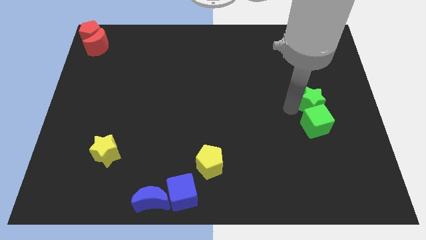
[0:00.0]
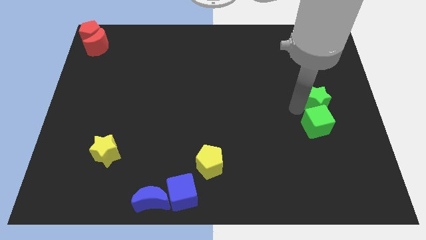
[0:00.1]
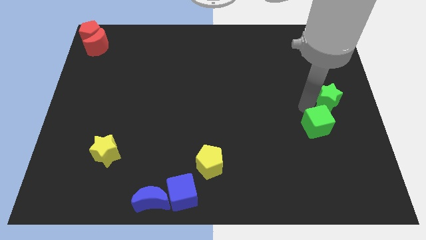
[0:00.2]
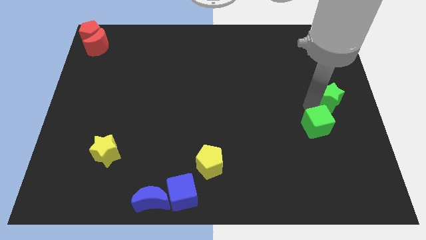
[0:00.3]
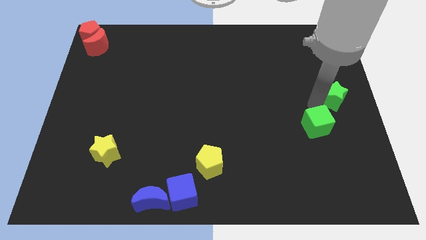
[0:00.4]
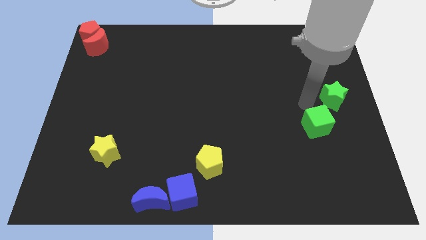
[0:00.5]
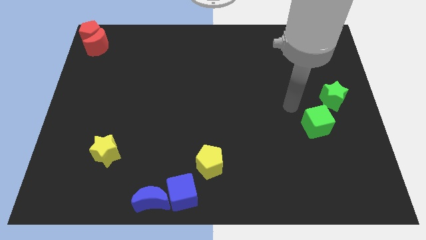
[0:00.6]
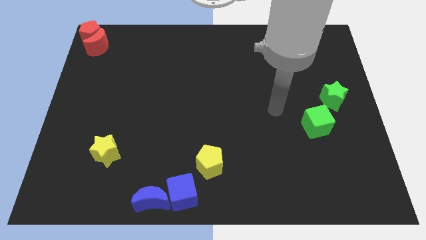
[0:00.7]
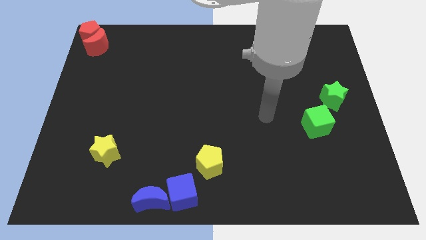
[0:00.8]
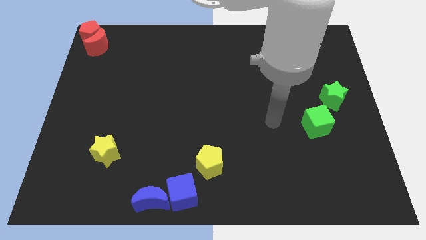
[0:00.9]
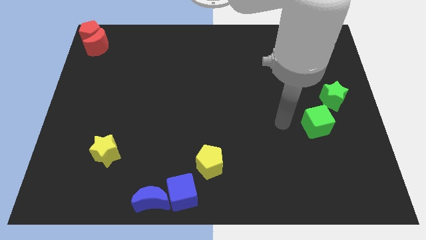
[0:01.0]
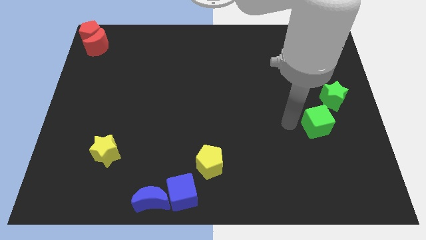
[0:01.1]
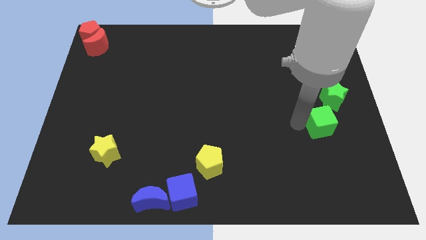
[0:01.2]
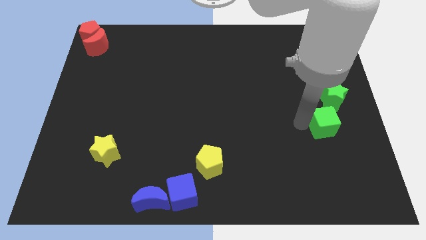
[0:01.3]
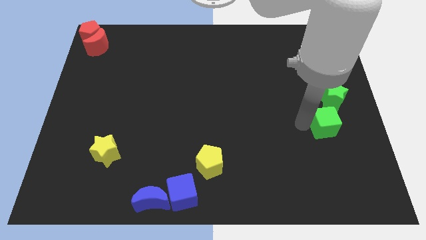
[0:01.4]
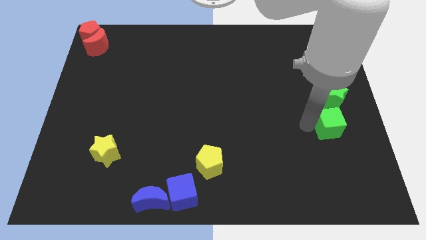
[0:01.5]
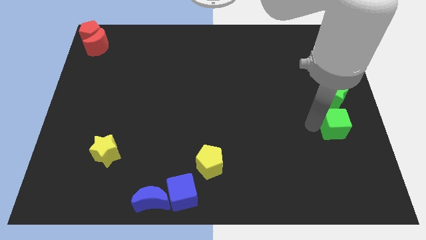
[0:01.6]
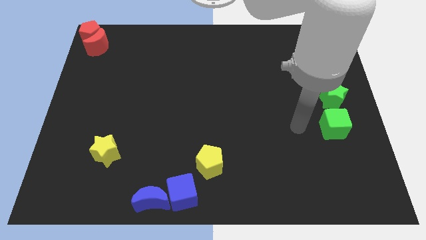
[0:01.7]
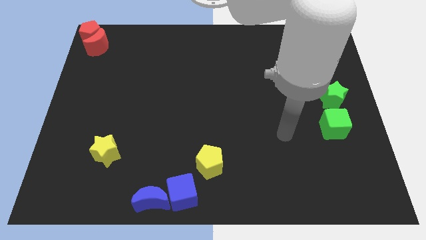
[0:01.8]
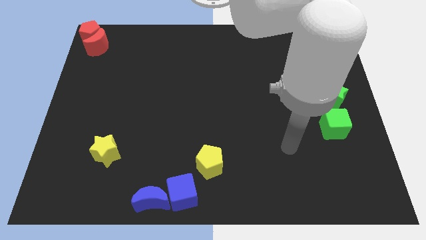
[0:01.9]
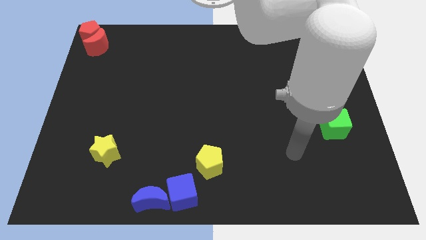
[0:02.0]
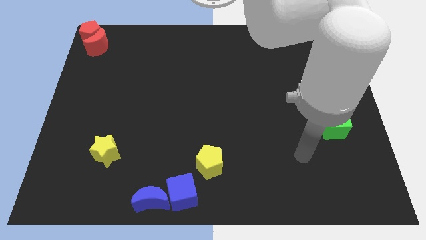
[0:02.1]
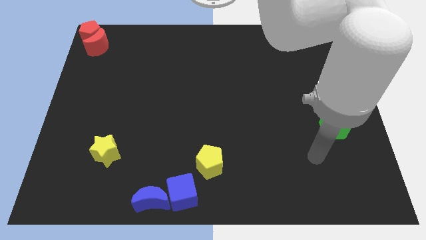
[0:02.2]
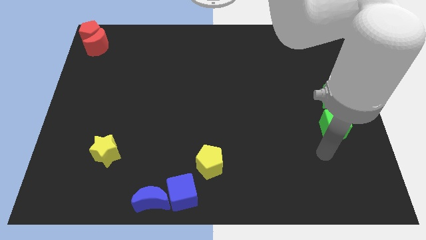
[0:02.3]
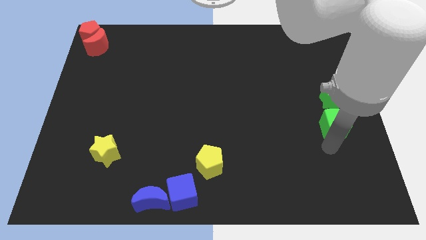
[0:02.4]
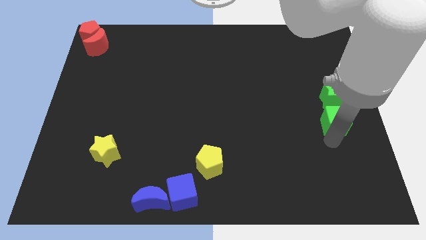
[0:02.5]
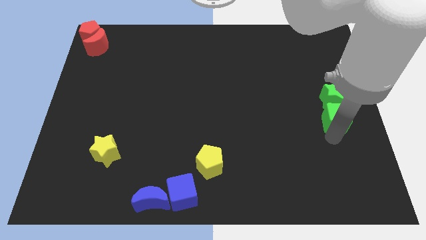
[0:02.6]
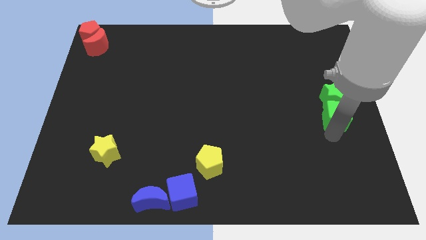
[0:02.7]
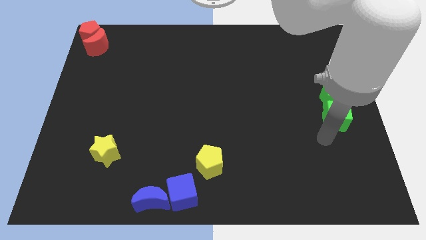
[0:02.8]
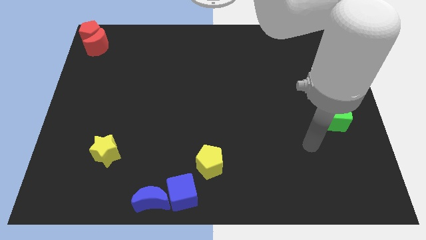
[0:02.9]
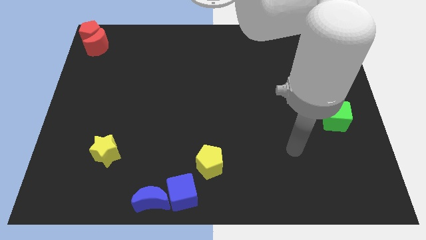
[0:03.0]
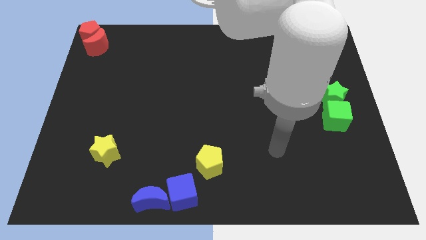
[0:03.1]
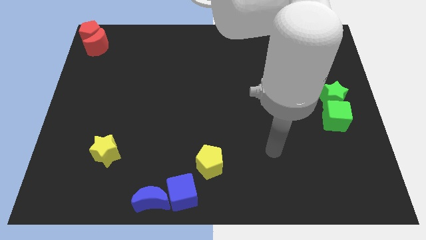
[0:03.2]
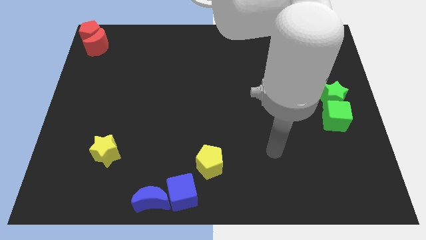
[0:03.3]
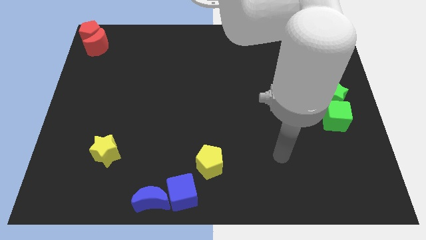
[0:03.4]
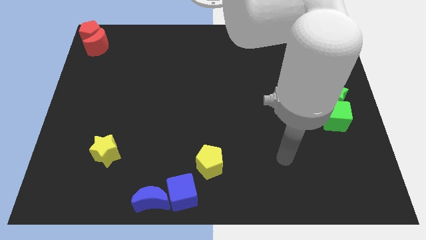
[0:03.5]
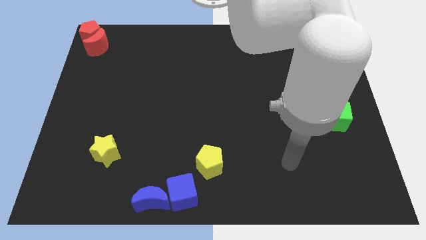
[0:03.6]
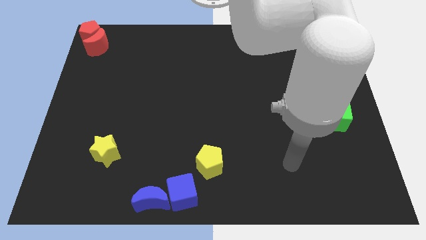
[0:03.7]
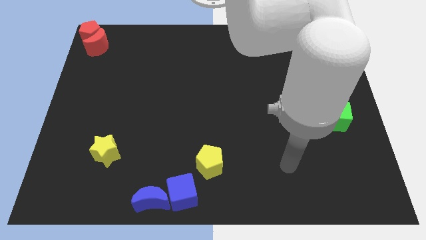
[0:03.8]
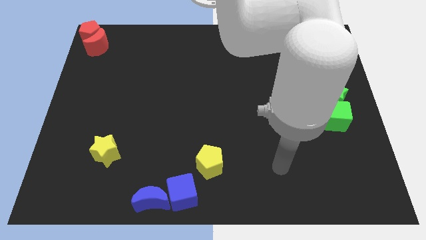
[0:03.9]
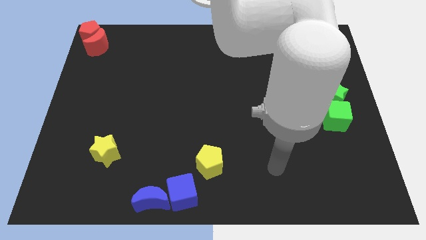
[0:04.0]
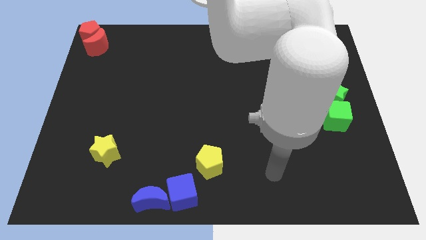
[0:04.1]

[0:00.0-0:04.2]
push the green cube into the green star

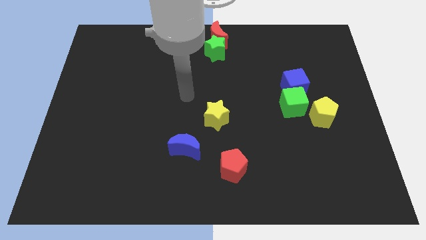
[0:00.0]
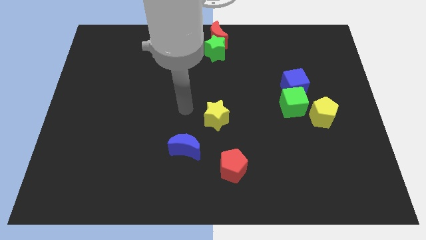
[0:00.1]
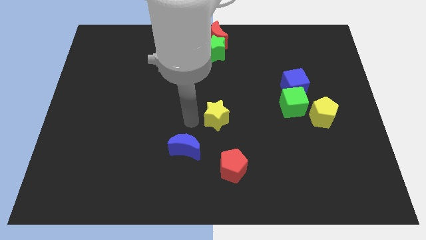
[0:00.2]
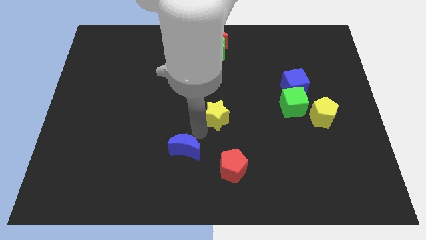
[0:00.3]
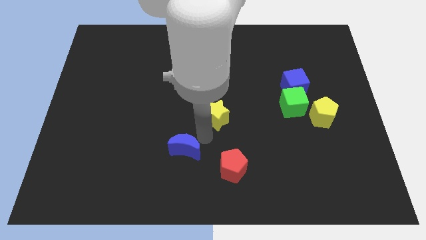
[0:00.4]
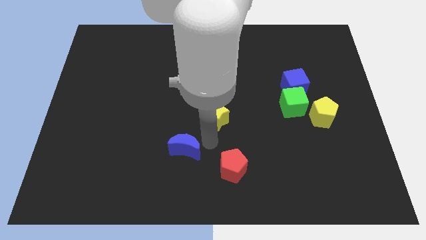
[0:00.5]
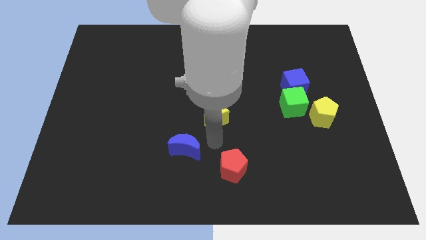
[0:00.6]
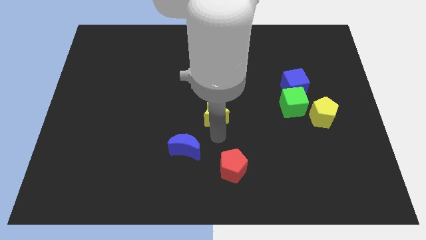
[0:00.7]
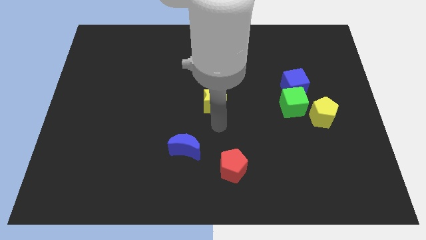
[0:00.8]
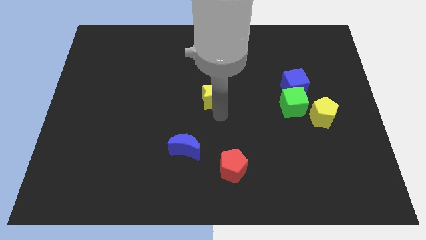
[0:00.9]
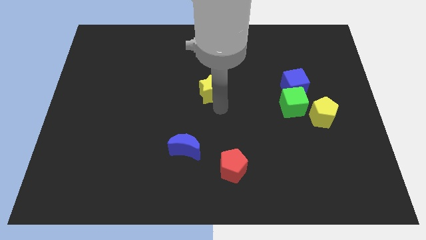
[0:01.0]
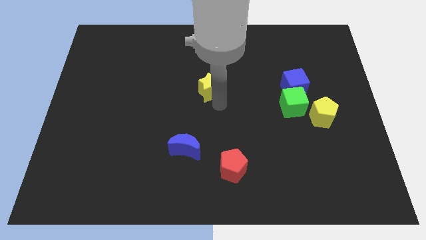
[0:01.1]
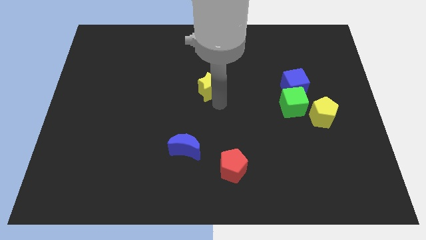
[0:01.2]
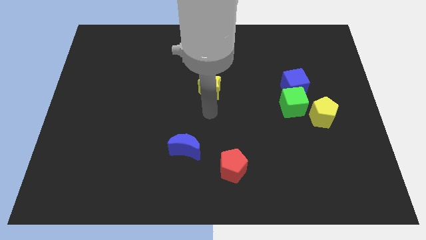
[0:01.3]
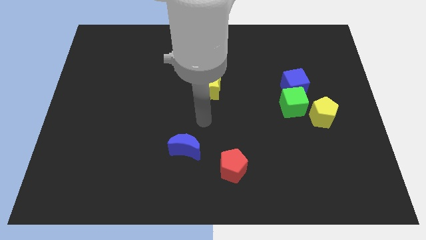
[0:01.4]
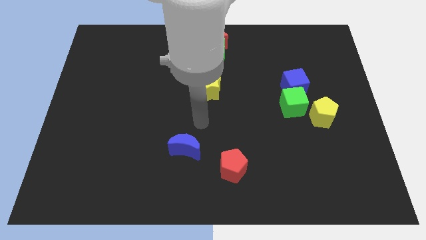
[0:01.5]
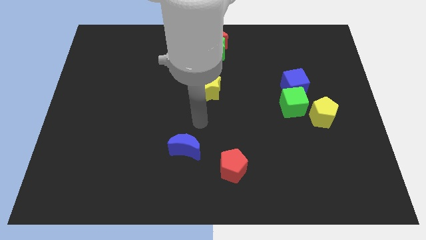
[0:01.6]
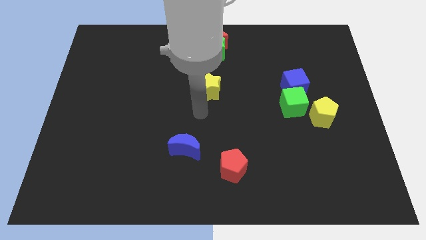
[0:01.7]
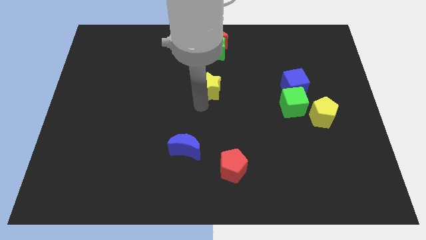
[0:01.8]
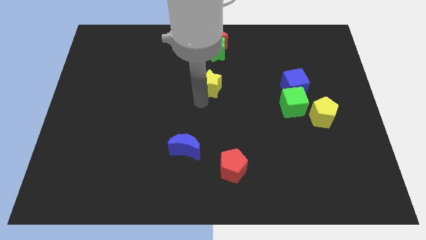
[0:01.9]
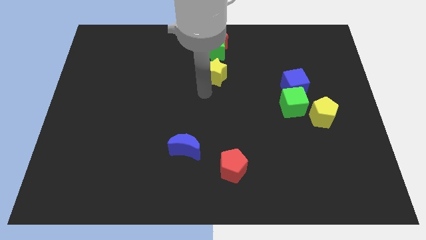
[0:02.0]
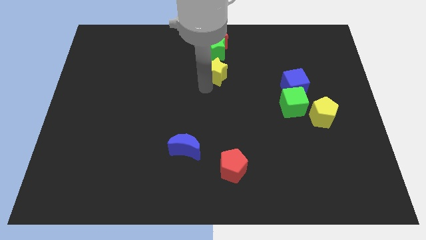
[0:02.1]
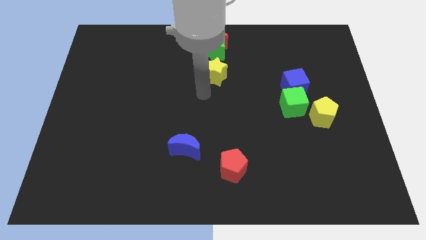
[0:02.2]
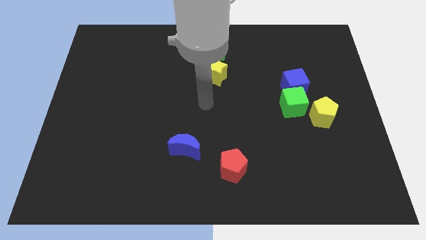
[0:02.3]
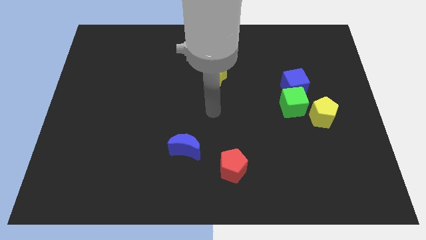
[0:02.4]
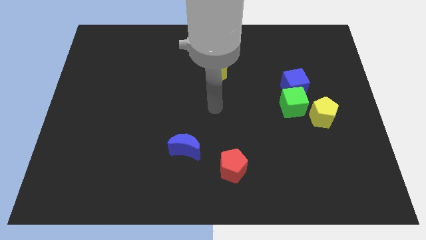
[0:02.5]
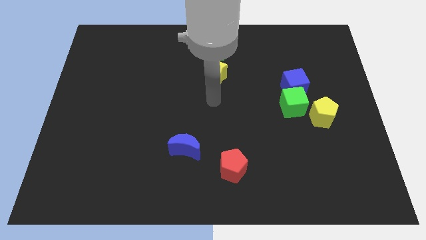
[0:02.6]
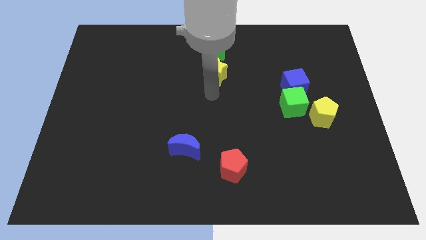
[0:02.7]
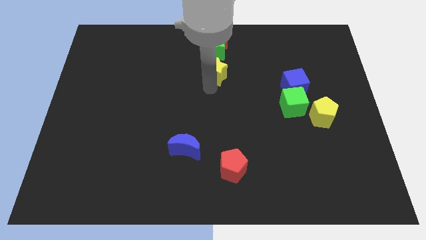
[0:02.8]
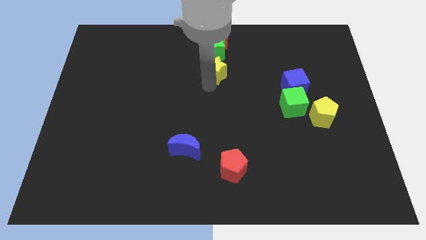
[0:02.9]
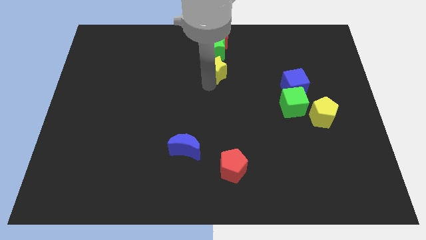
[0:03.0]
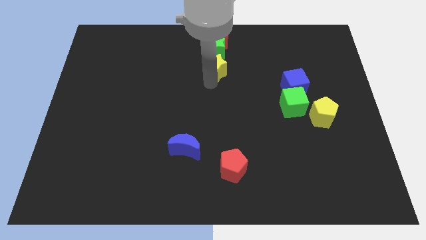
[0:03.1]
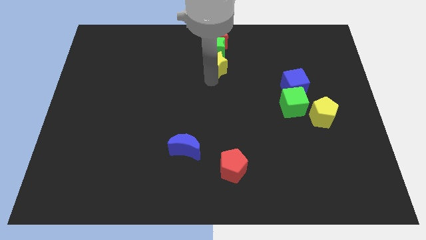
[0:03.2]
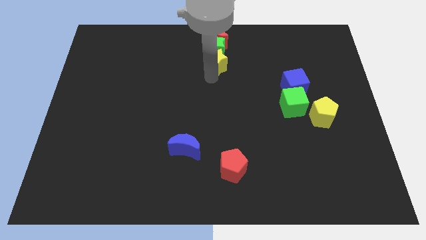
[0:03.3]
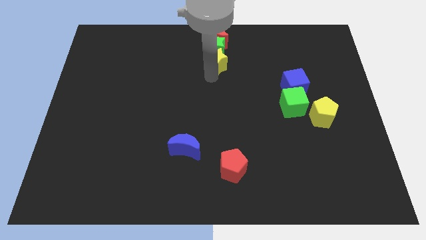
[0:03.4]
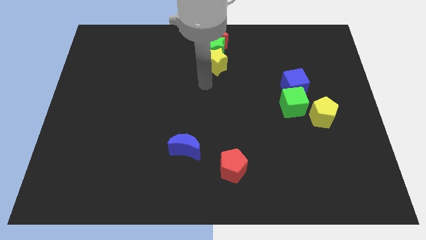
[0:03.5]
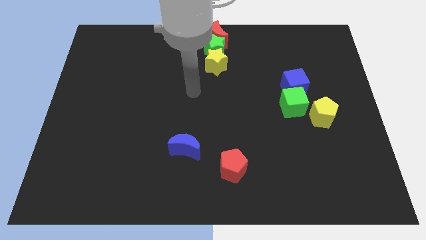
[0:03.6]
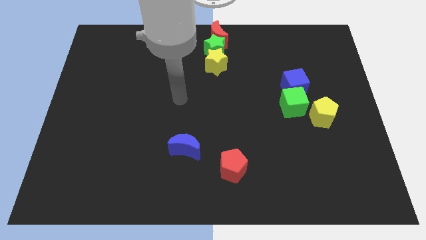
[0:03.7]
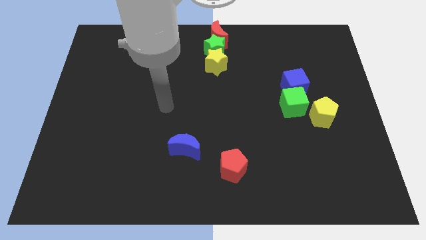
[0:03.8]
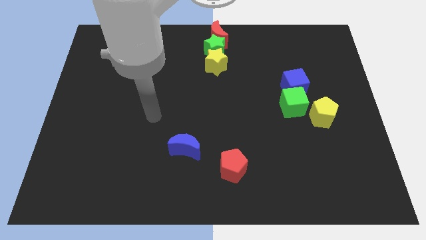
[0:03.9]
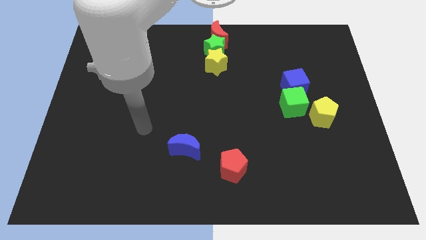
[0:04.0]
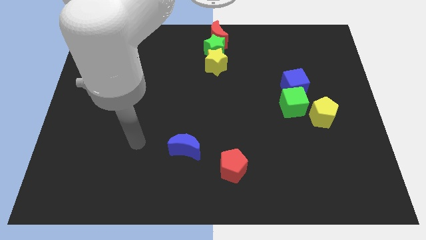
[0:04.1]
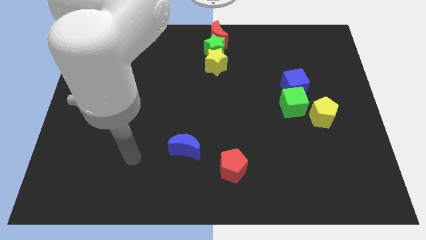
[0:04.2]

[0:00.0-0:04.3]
push the yellow star close to the green star

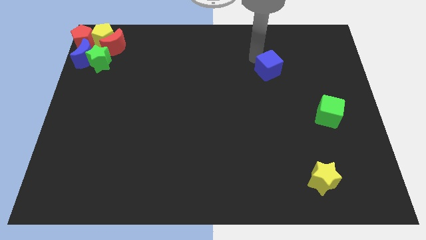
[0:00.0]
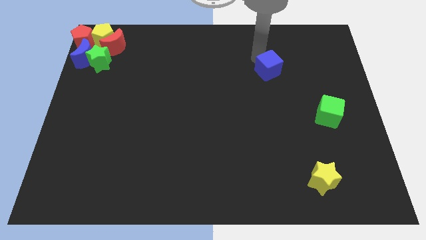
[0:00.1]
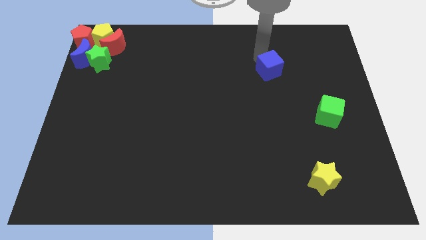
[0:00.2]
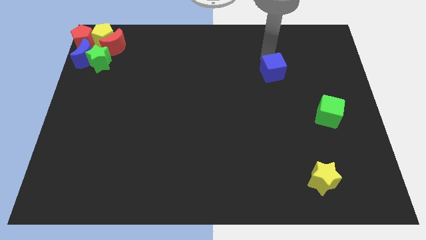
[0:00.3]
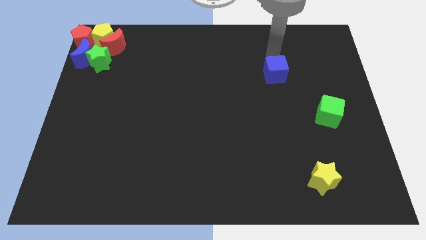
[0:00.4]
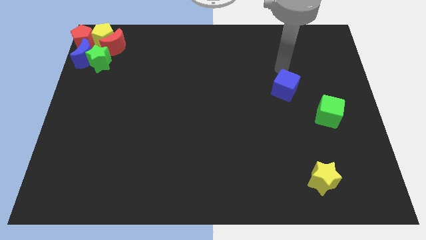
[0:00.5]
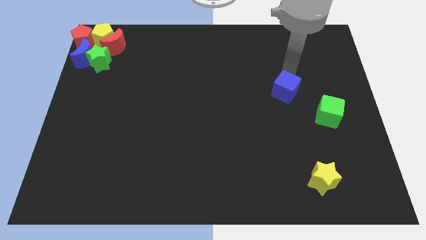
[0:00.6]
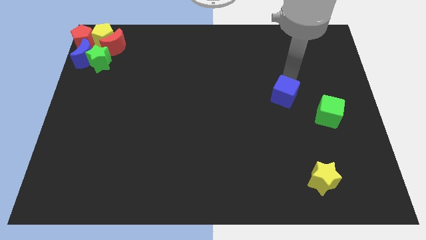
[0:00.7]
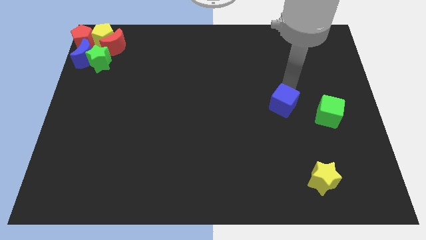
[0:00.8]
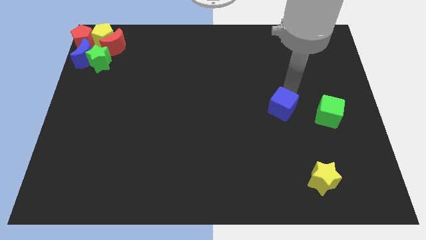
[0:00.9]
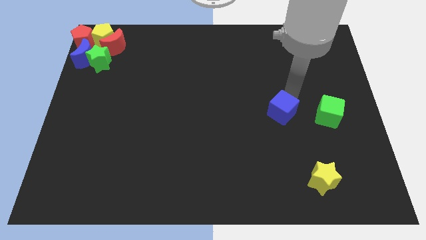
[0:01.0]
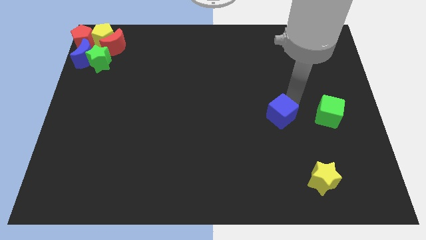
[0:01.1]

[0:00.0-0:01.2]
place the blue cube parallel to green cube
